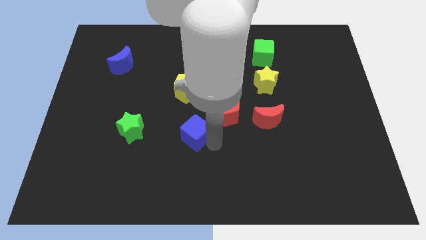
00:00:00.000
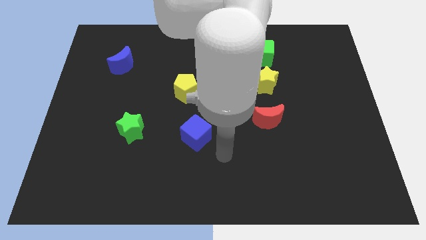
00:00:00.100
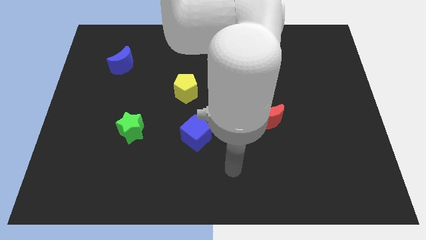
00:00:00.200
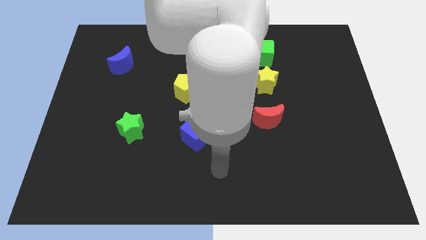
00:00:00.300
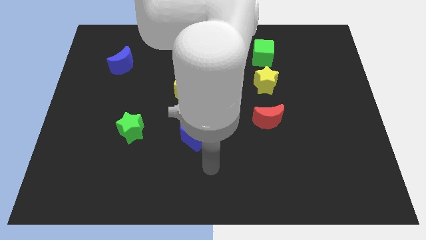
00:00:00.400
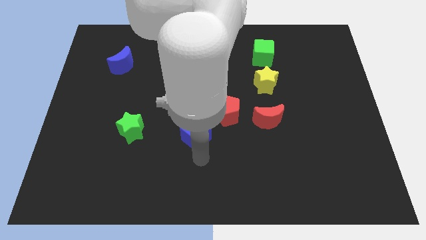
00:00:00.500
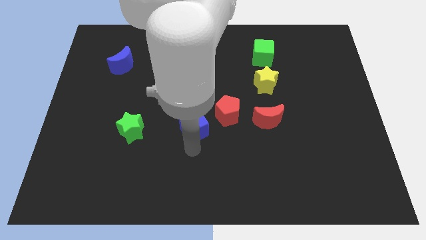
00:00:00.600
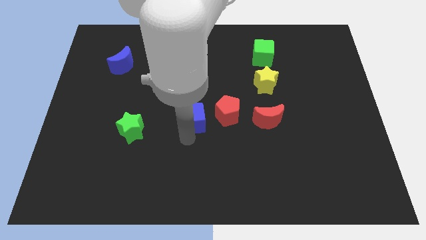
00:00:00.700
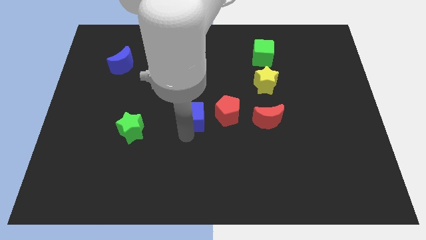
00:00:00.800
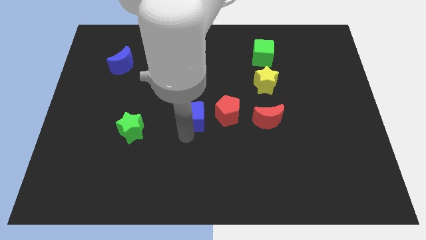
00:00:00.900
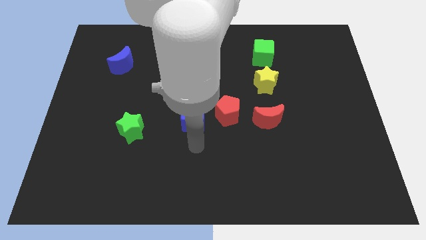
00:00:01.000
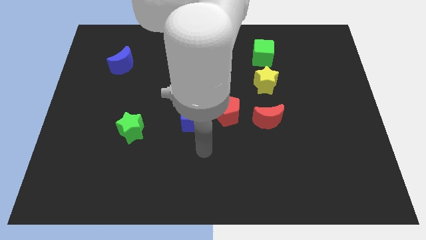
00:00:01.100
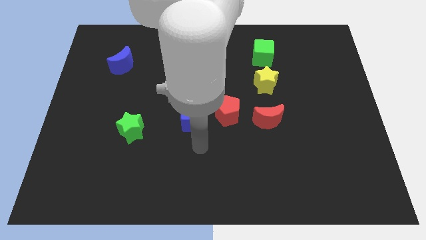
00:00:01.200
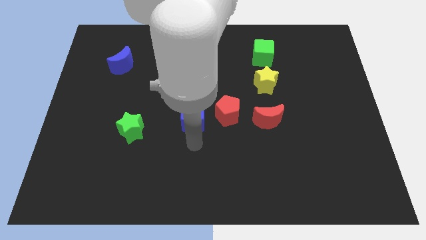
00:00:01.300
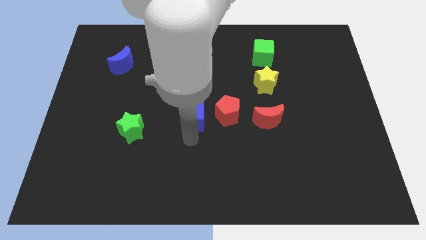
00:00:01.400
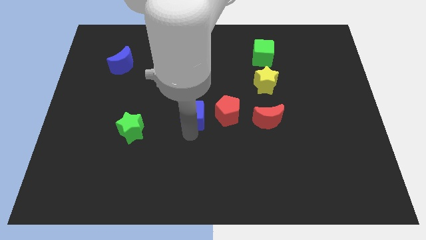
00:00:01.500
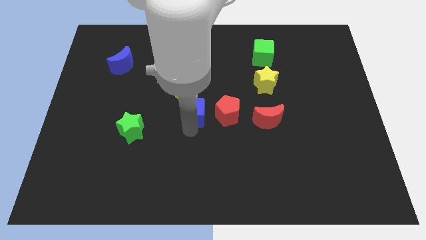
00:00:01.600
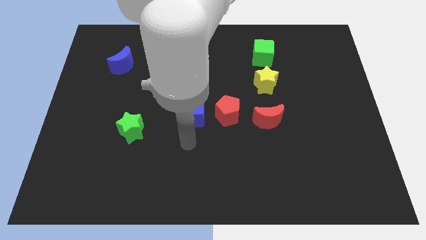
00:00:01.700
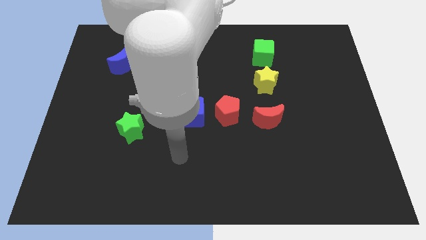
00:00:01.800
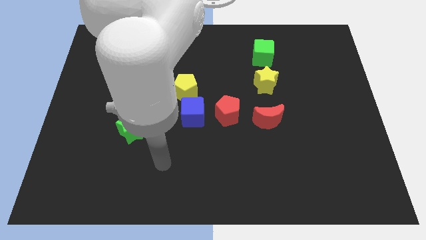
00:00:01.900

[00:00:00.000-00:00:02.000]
move the blue cube to the left side of the red pentagon

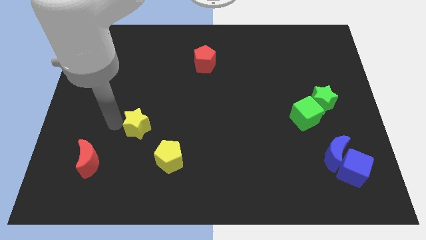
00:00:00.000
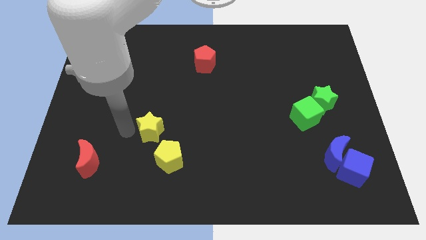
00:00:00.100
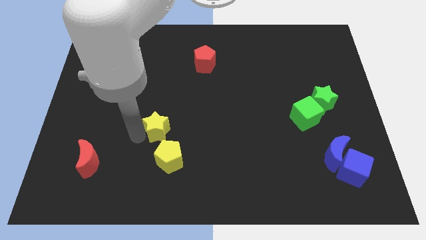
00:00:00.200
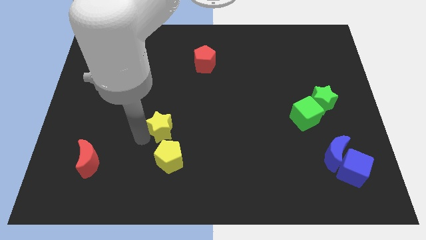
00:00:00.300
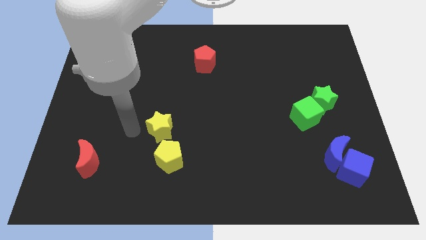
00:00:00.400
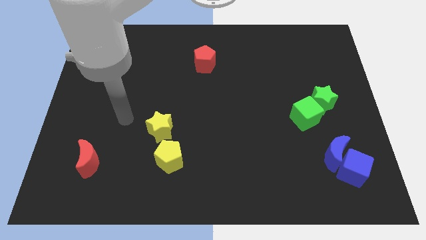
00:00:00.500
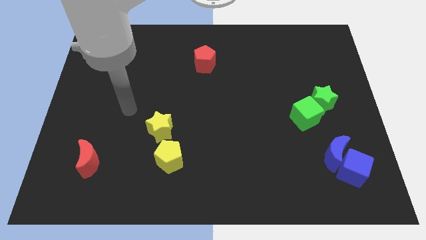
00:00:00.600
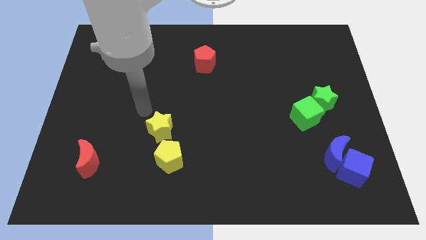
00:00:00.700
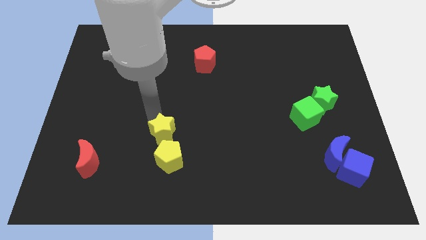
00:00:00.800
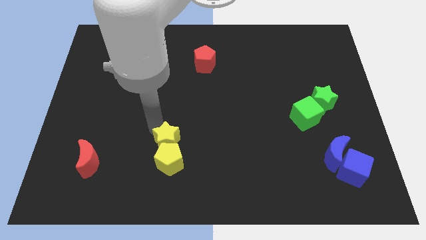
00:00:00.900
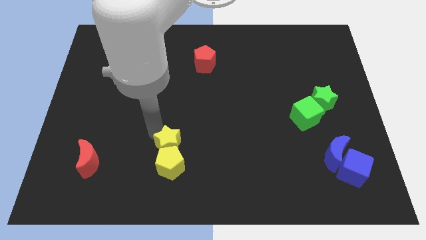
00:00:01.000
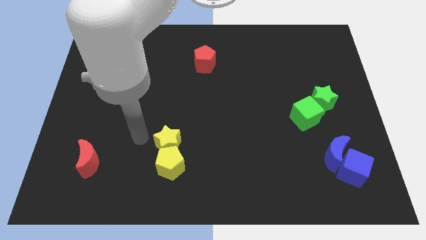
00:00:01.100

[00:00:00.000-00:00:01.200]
move the yellow star into yellow pentagon

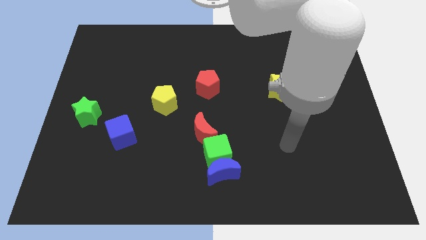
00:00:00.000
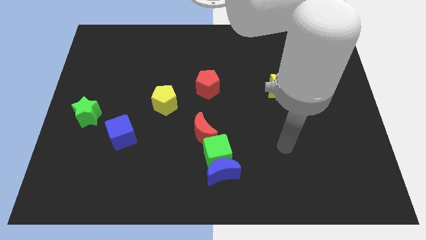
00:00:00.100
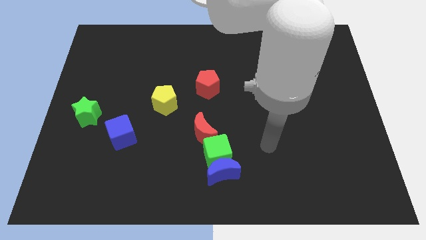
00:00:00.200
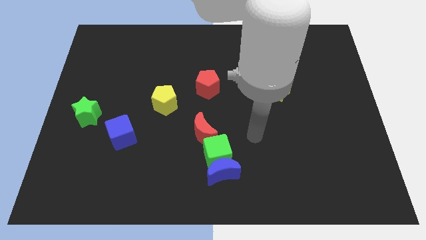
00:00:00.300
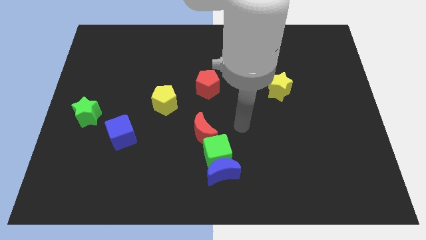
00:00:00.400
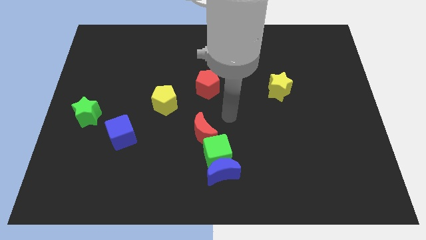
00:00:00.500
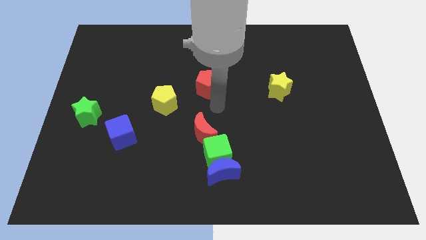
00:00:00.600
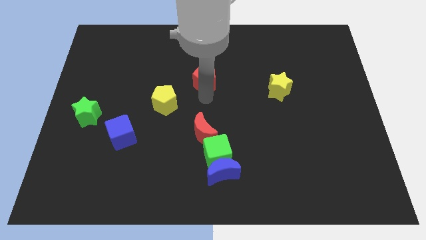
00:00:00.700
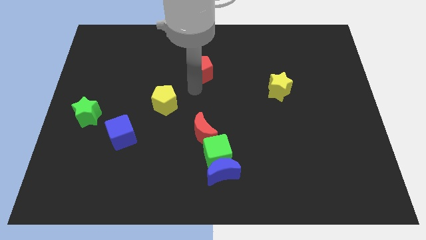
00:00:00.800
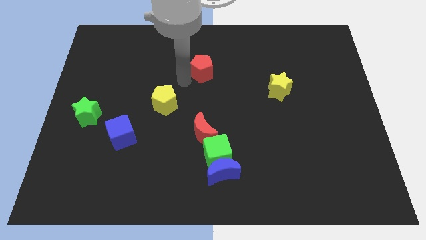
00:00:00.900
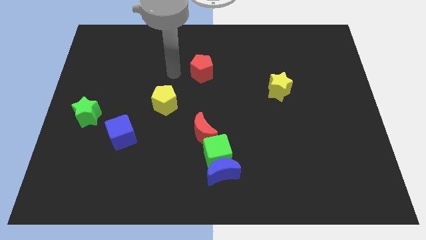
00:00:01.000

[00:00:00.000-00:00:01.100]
push the red pentagon slightly towards the top side of the board

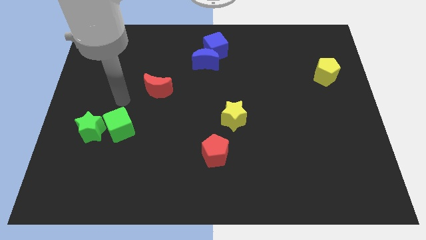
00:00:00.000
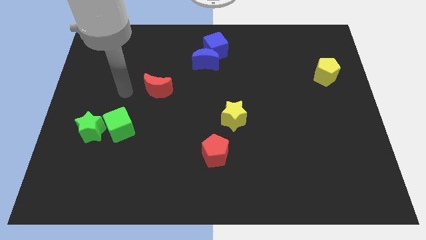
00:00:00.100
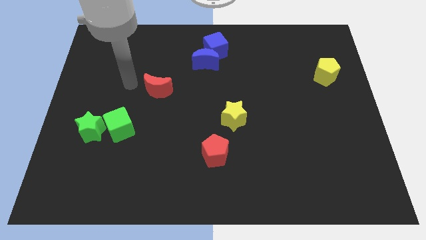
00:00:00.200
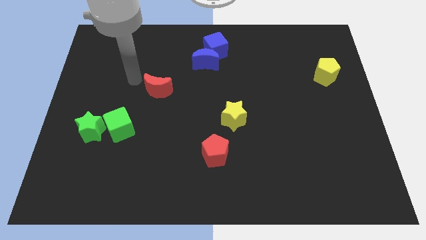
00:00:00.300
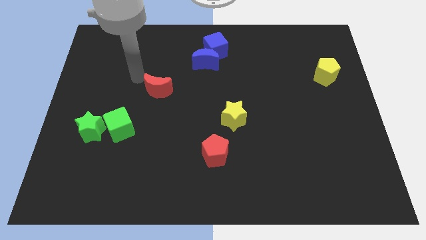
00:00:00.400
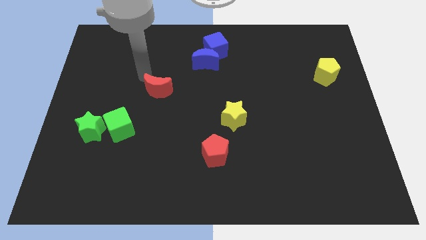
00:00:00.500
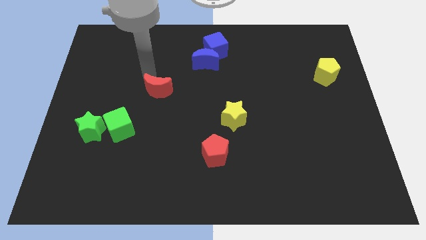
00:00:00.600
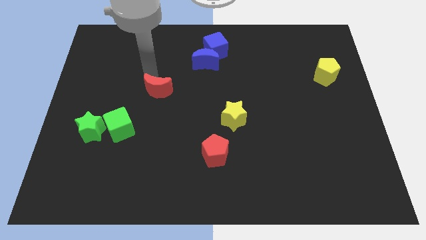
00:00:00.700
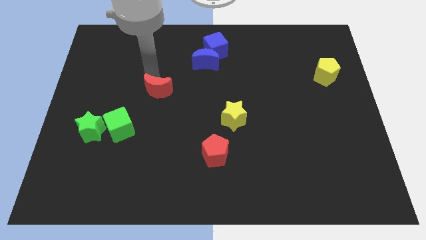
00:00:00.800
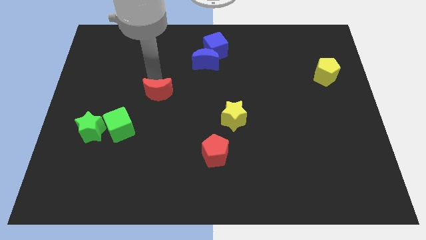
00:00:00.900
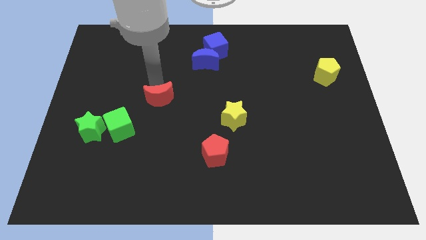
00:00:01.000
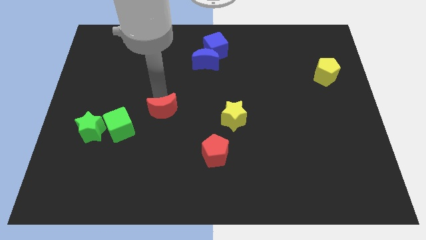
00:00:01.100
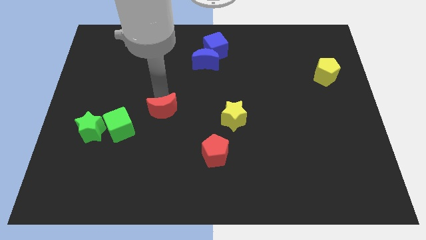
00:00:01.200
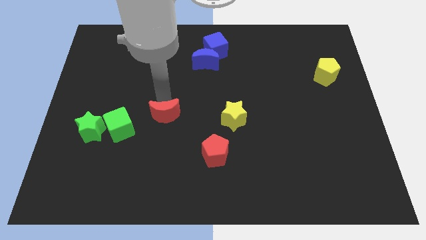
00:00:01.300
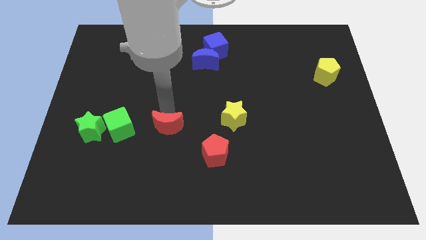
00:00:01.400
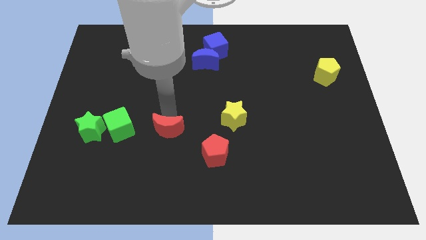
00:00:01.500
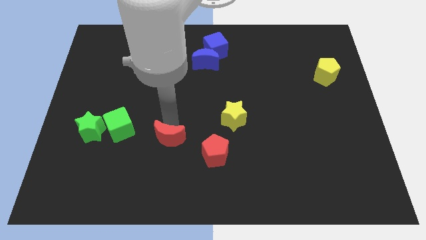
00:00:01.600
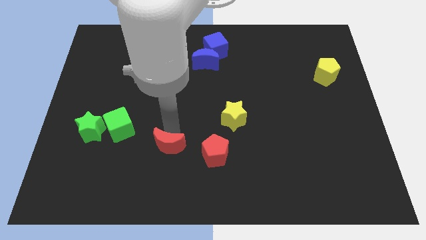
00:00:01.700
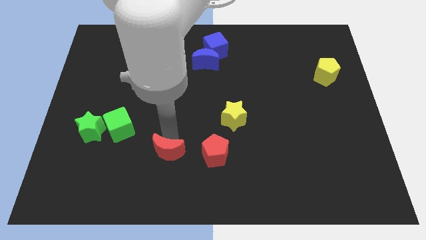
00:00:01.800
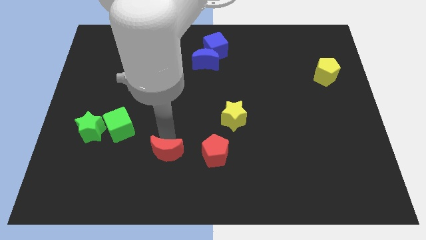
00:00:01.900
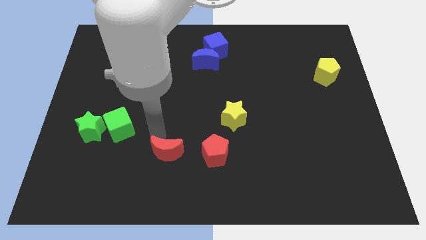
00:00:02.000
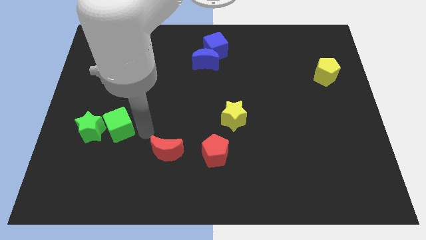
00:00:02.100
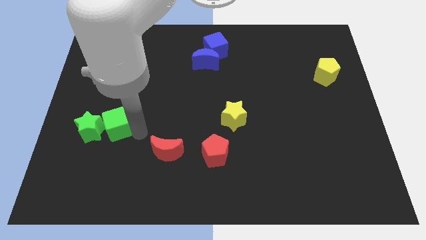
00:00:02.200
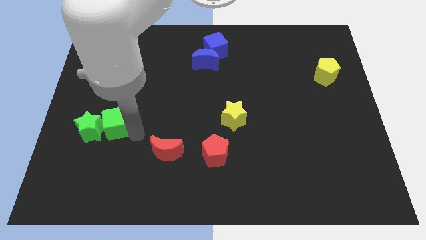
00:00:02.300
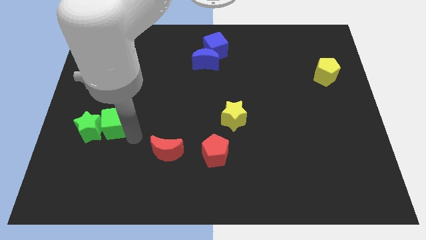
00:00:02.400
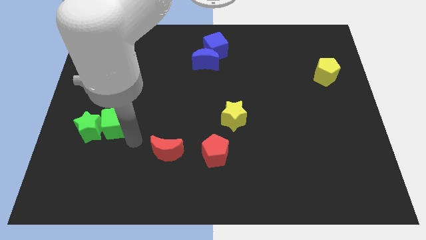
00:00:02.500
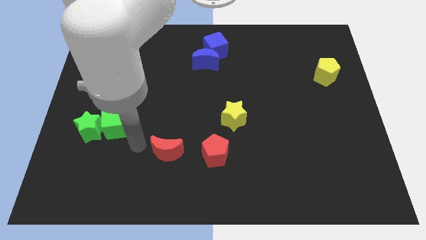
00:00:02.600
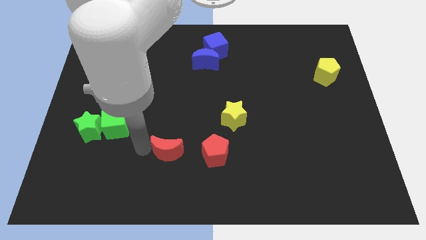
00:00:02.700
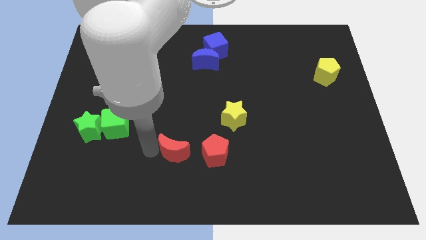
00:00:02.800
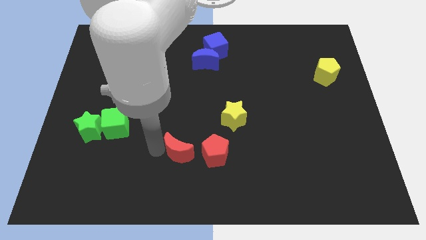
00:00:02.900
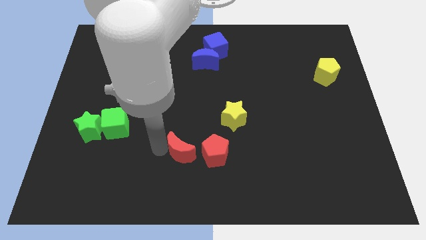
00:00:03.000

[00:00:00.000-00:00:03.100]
place the red crescent to the left of the red pentagon

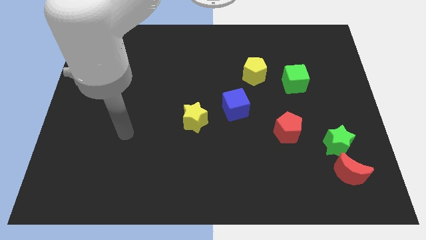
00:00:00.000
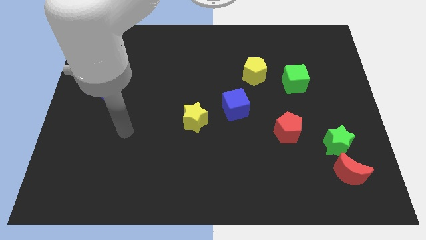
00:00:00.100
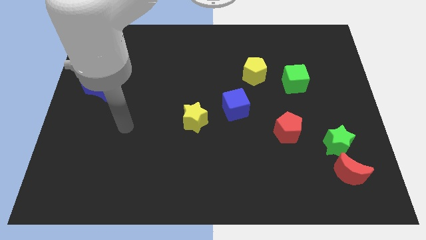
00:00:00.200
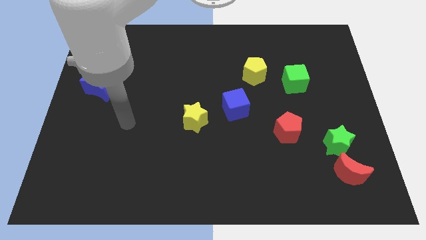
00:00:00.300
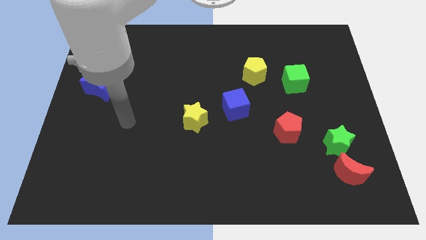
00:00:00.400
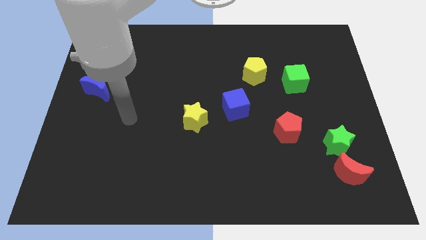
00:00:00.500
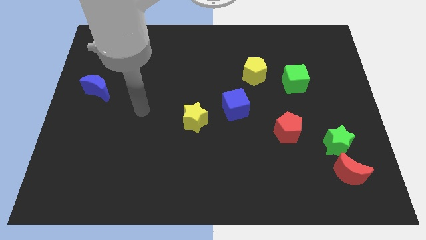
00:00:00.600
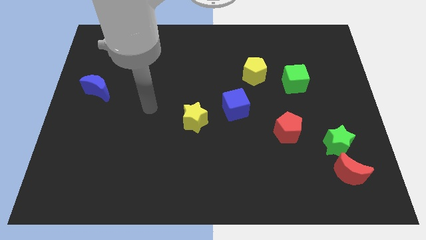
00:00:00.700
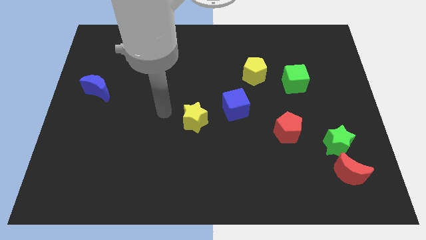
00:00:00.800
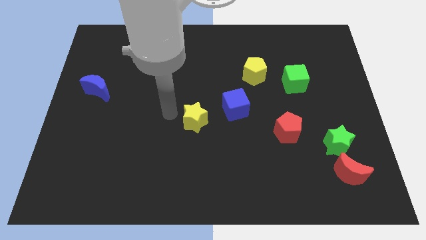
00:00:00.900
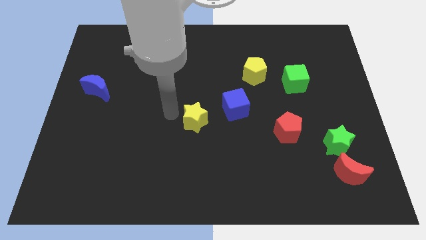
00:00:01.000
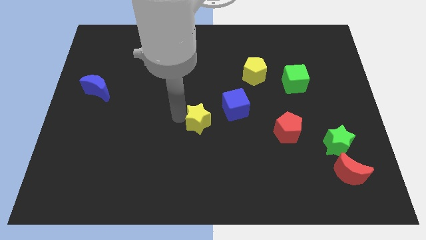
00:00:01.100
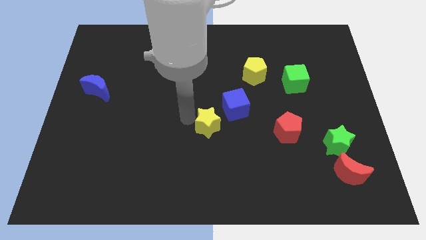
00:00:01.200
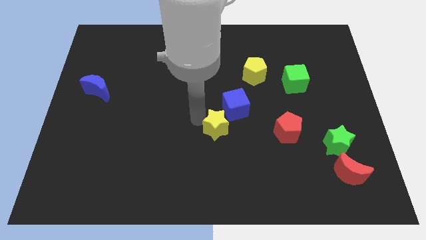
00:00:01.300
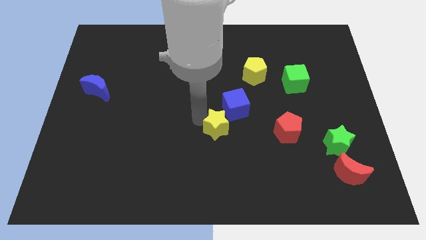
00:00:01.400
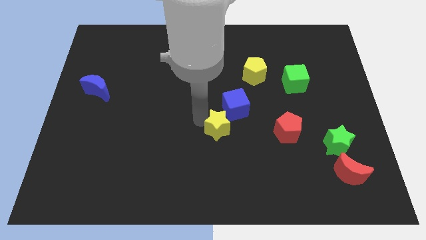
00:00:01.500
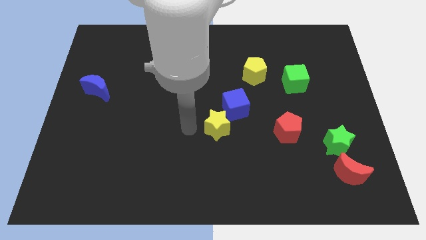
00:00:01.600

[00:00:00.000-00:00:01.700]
place yellow star to the bottom left of blue cube
